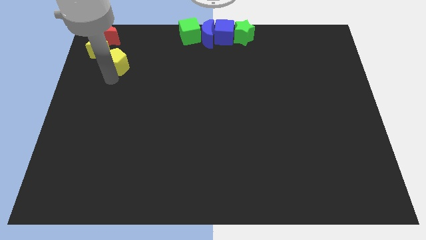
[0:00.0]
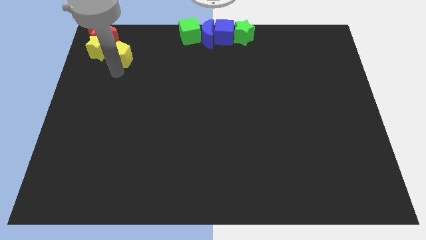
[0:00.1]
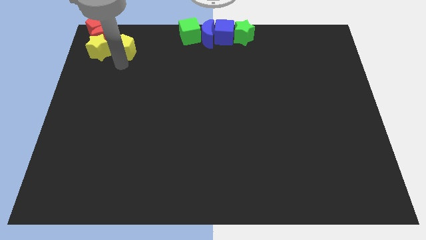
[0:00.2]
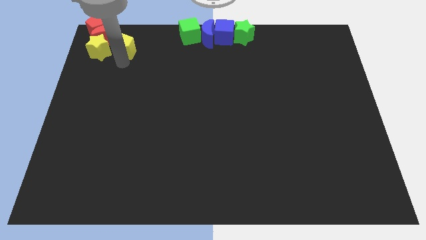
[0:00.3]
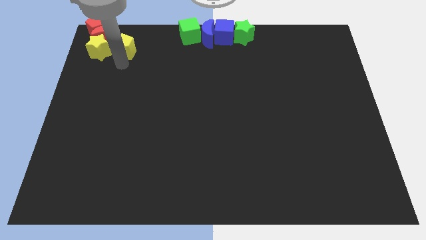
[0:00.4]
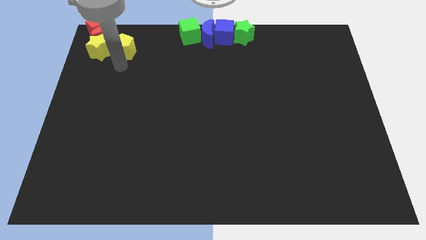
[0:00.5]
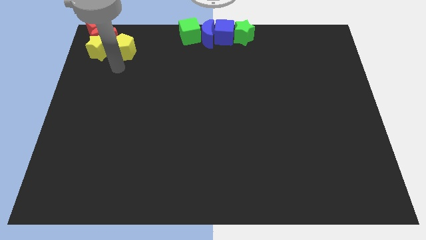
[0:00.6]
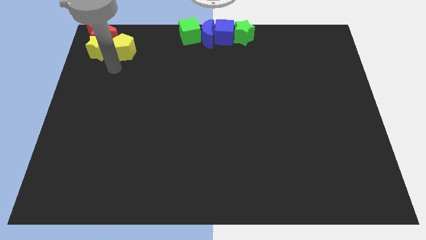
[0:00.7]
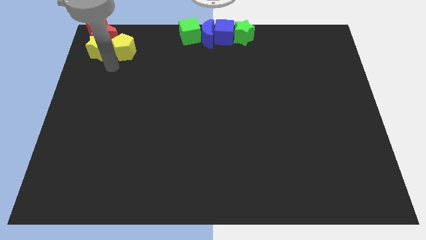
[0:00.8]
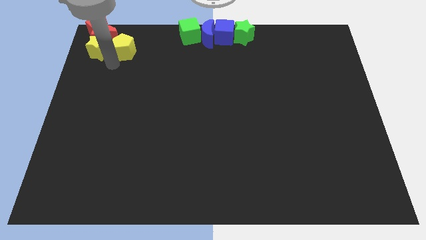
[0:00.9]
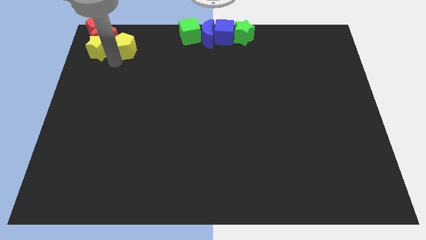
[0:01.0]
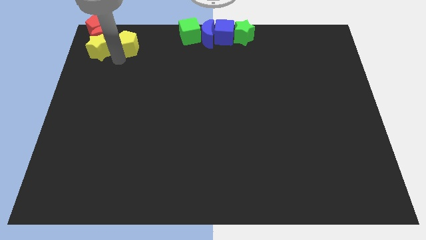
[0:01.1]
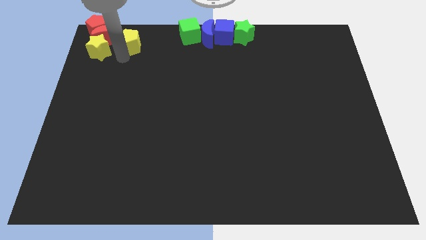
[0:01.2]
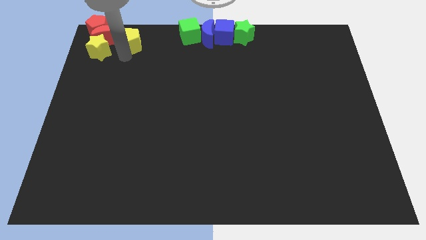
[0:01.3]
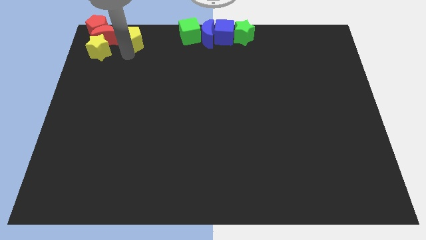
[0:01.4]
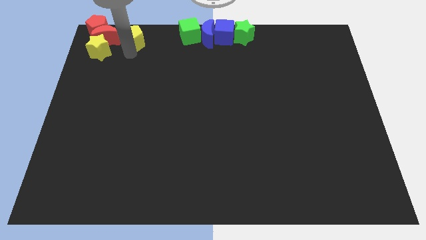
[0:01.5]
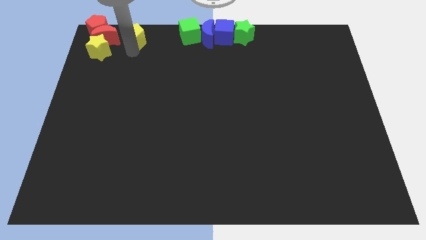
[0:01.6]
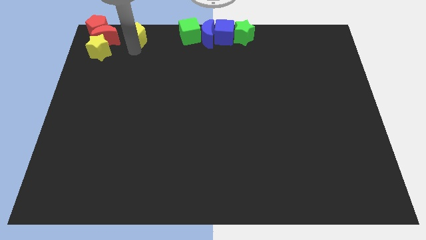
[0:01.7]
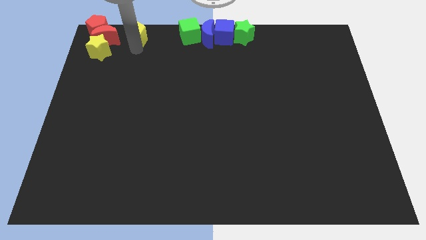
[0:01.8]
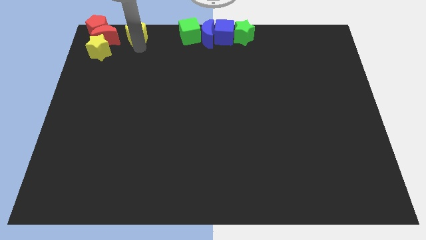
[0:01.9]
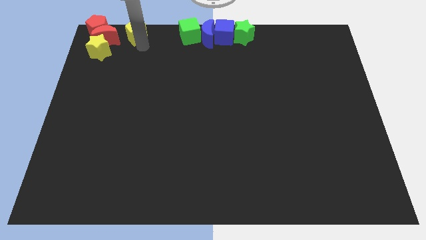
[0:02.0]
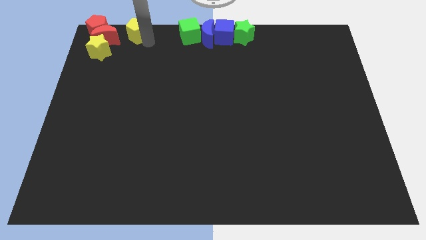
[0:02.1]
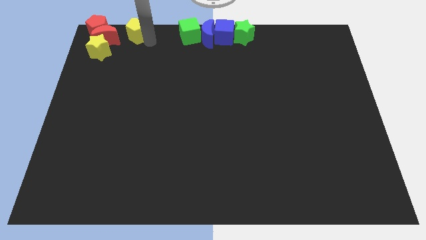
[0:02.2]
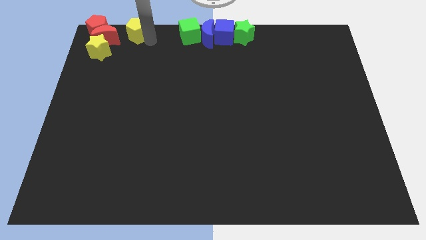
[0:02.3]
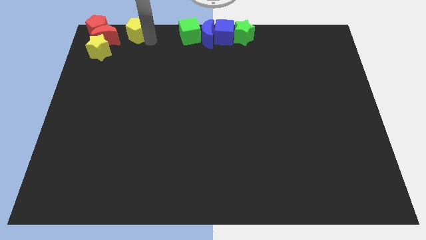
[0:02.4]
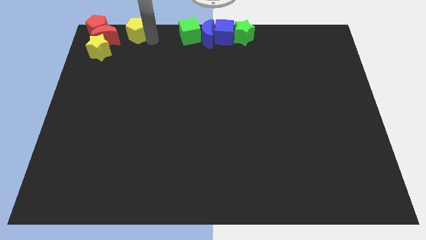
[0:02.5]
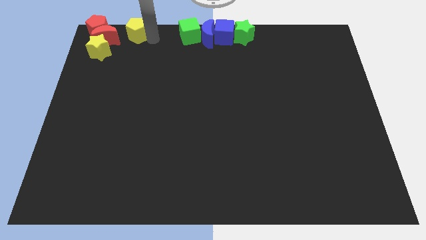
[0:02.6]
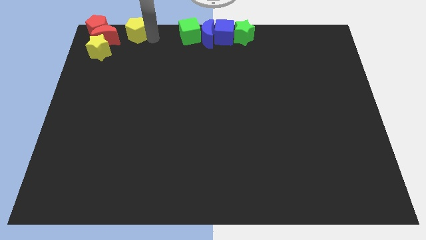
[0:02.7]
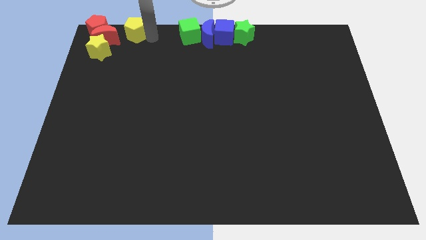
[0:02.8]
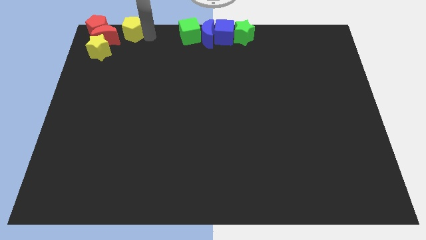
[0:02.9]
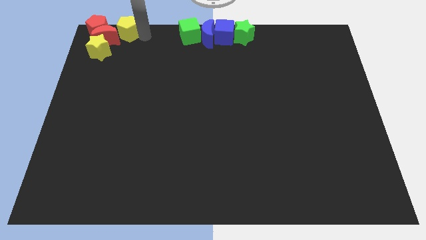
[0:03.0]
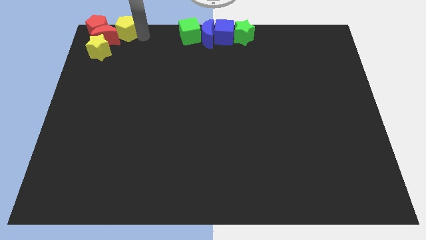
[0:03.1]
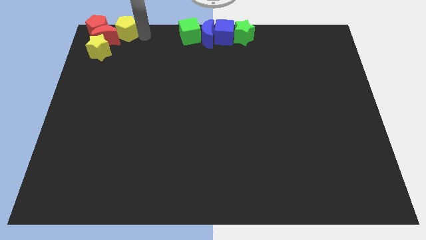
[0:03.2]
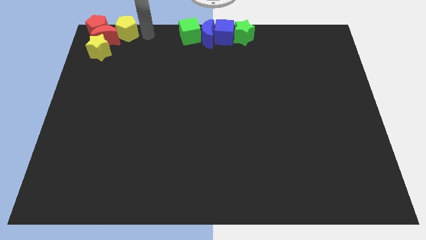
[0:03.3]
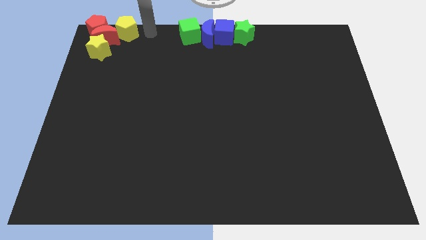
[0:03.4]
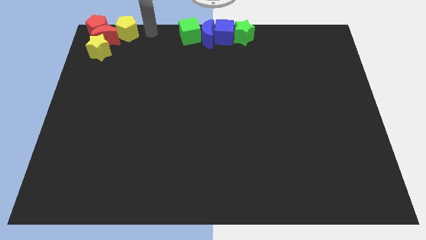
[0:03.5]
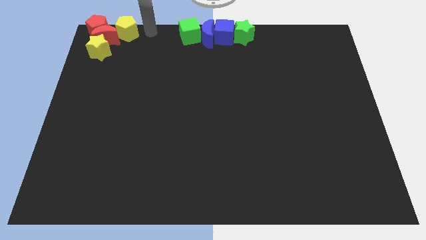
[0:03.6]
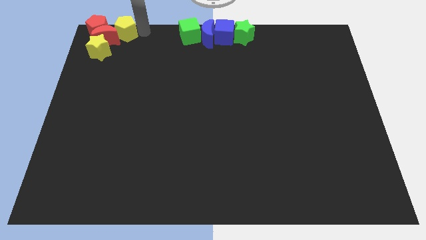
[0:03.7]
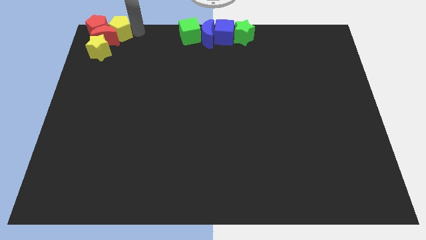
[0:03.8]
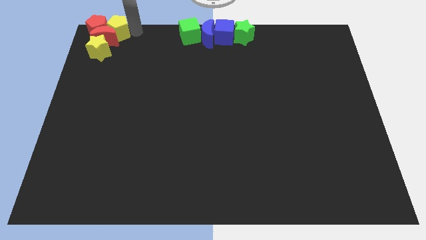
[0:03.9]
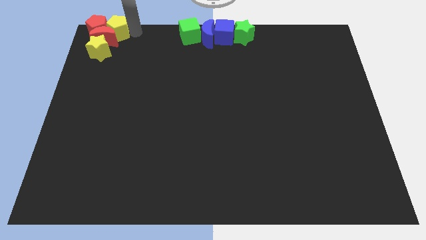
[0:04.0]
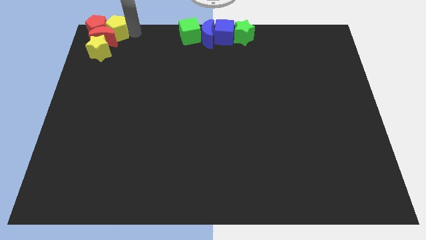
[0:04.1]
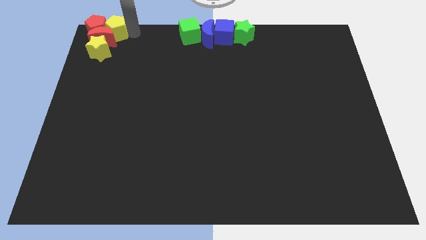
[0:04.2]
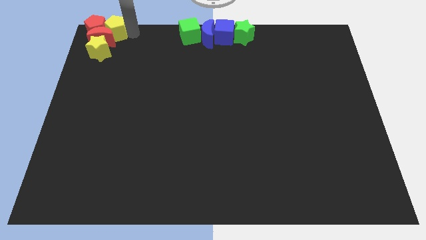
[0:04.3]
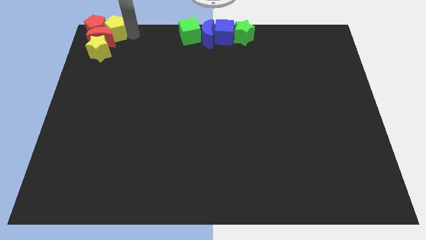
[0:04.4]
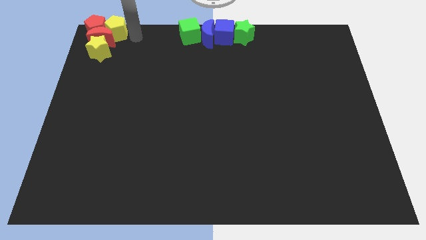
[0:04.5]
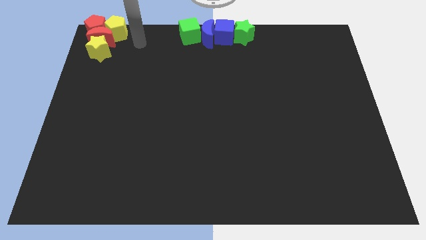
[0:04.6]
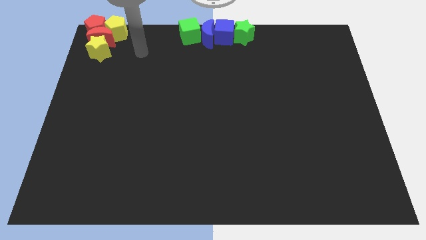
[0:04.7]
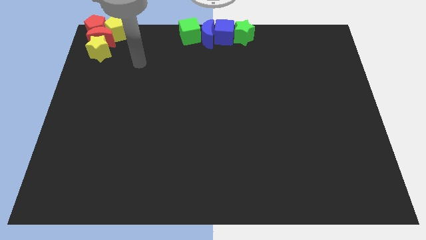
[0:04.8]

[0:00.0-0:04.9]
adjust the red and yellow blocks at the top left corner of the board

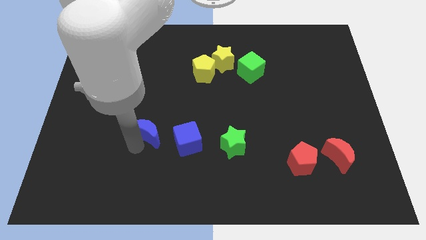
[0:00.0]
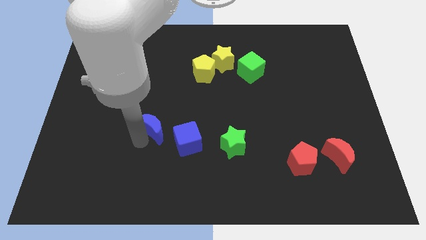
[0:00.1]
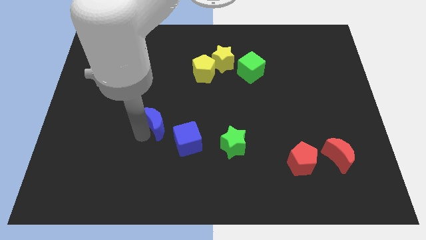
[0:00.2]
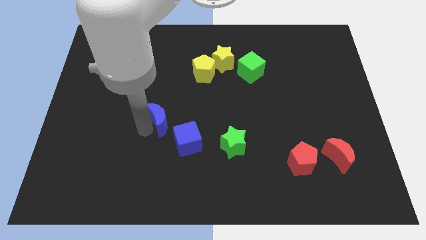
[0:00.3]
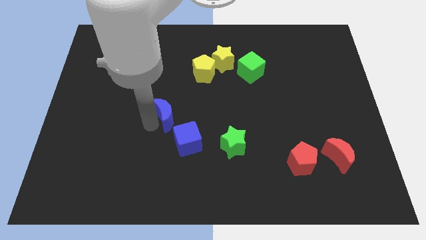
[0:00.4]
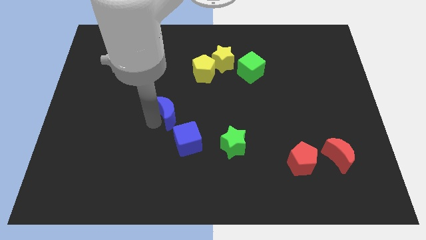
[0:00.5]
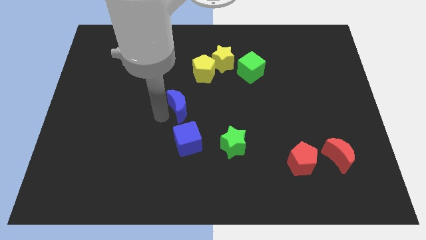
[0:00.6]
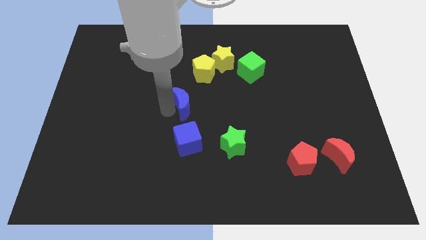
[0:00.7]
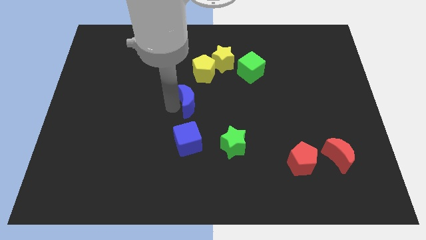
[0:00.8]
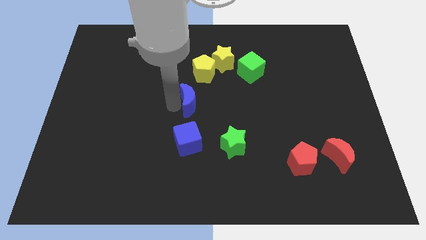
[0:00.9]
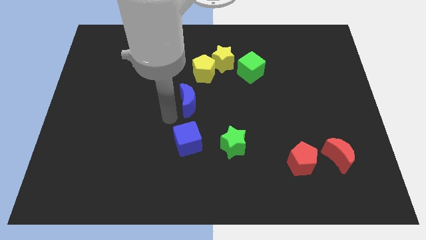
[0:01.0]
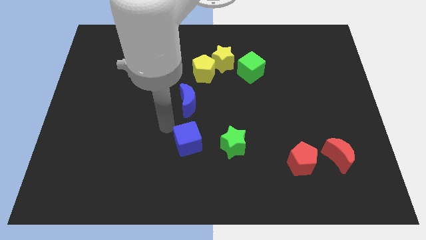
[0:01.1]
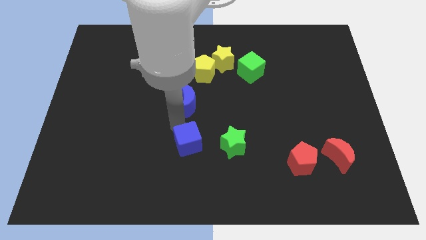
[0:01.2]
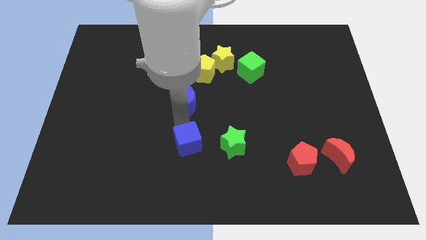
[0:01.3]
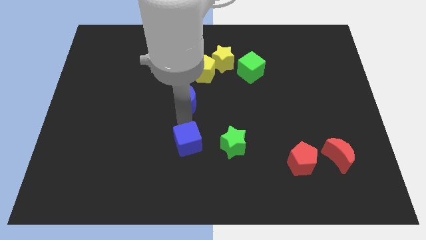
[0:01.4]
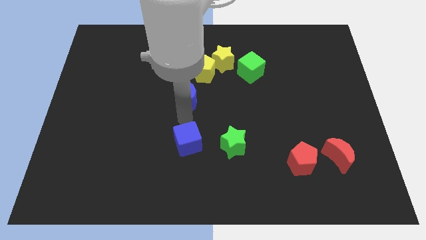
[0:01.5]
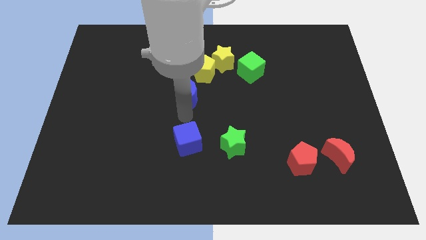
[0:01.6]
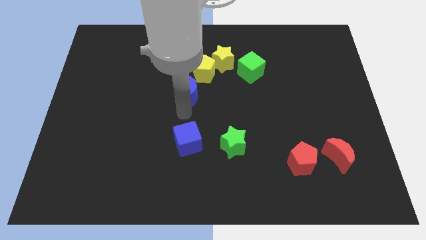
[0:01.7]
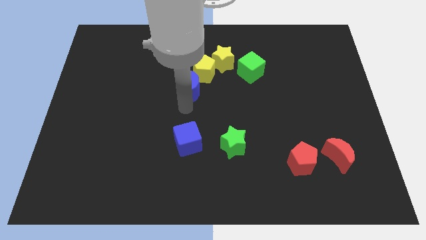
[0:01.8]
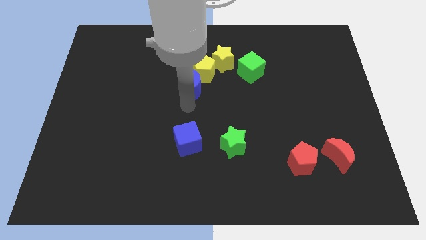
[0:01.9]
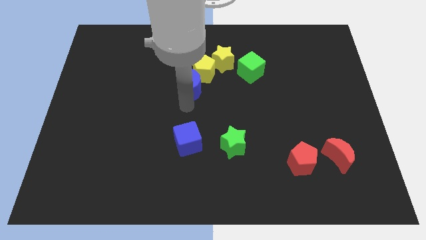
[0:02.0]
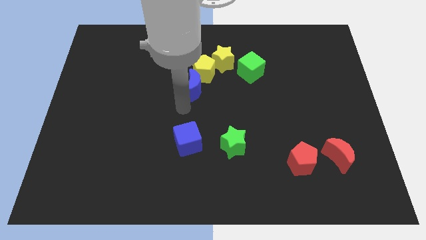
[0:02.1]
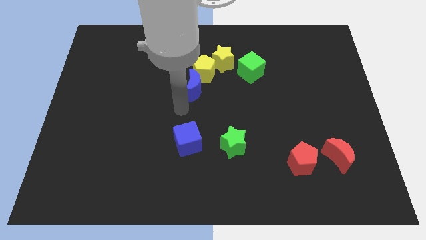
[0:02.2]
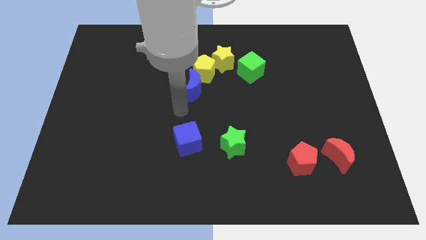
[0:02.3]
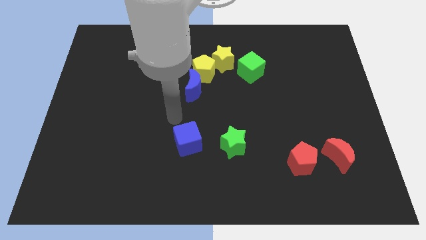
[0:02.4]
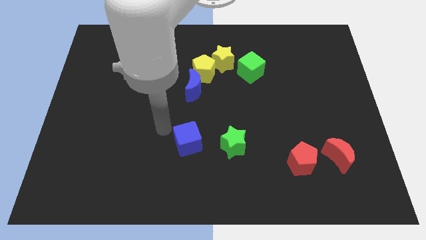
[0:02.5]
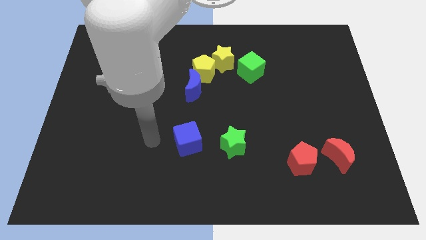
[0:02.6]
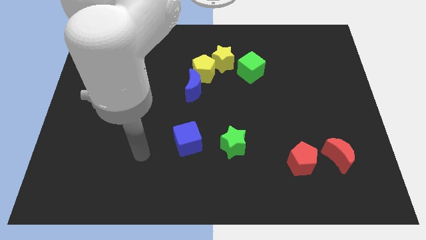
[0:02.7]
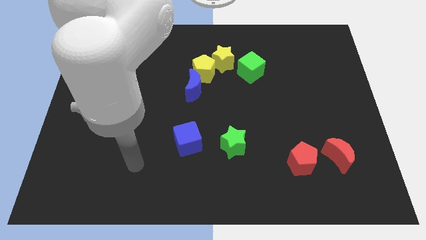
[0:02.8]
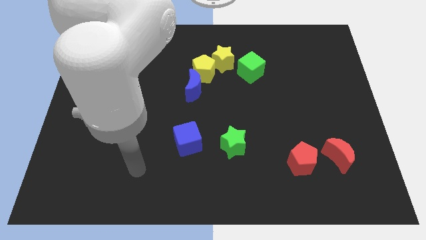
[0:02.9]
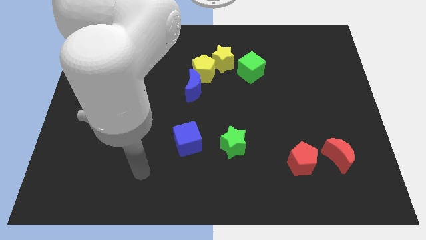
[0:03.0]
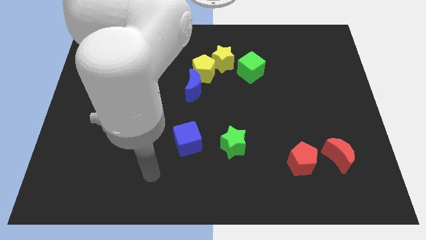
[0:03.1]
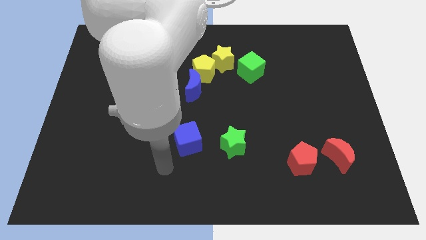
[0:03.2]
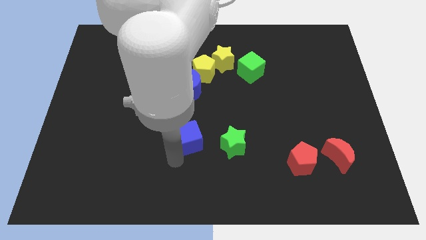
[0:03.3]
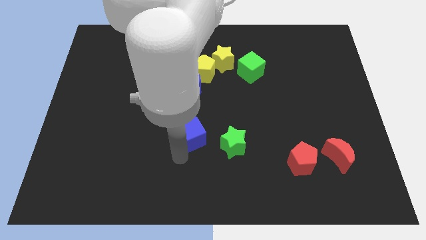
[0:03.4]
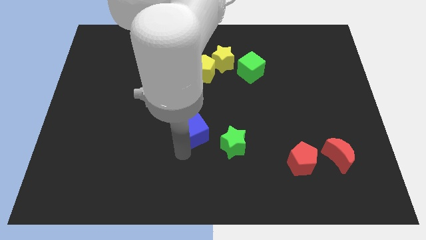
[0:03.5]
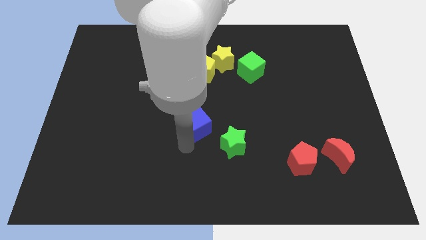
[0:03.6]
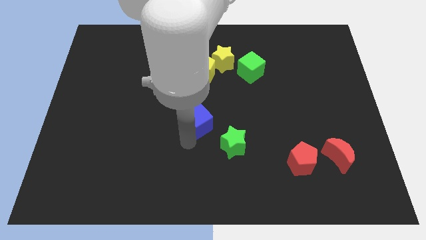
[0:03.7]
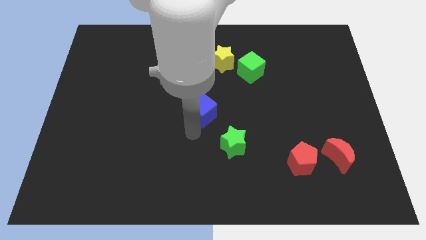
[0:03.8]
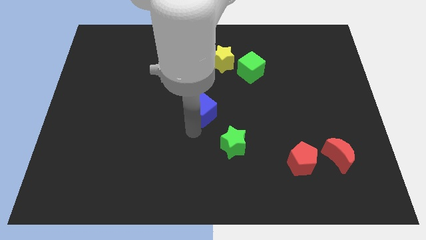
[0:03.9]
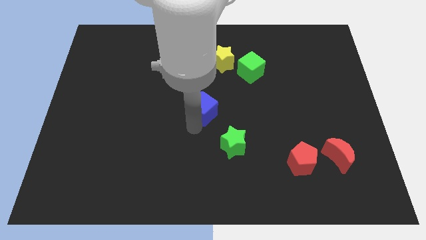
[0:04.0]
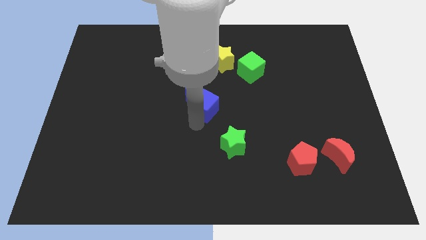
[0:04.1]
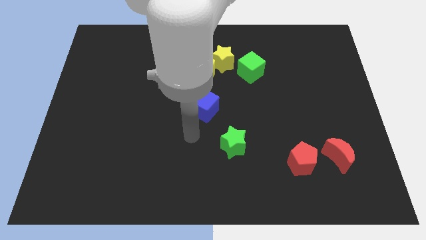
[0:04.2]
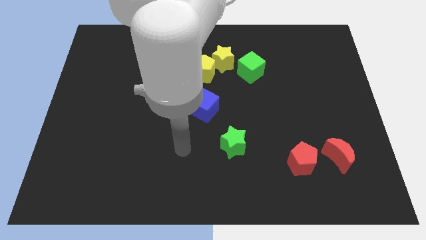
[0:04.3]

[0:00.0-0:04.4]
put the blue blocks below the yellow pentagon
